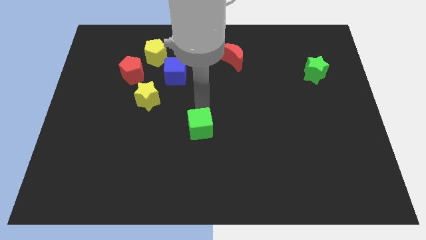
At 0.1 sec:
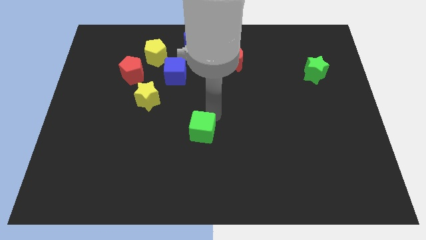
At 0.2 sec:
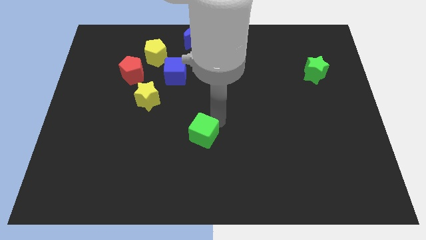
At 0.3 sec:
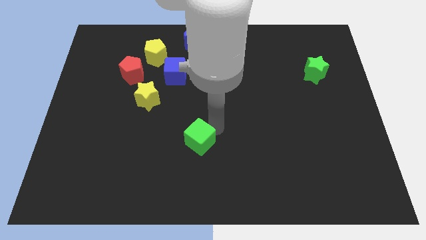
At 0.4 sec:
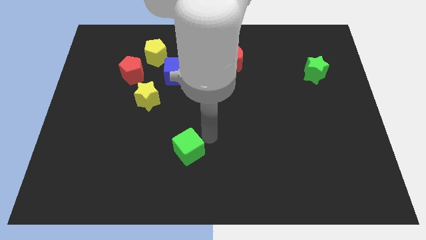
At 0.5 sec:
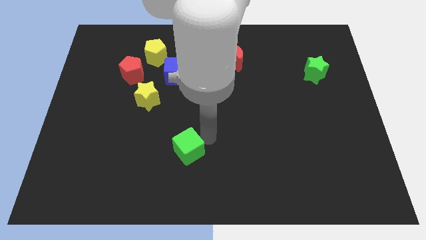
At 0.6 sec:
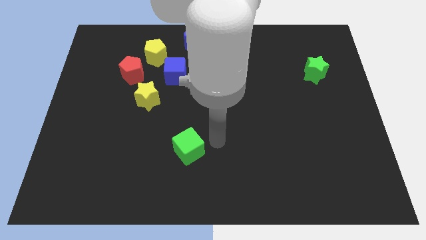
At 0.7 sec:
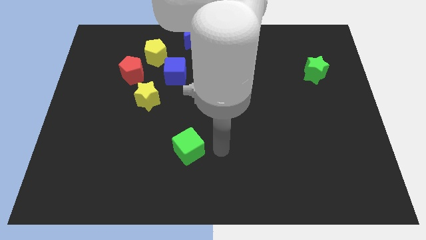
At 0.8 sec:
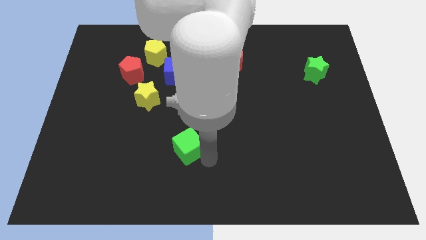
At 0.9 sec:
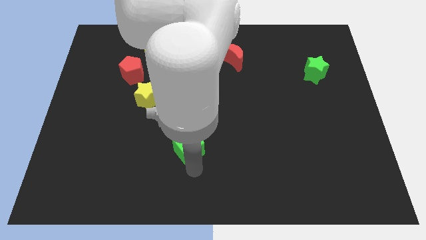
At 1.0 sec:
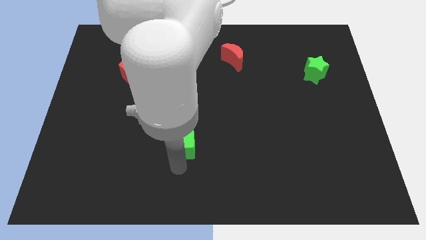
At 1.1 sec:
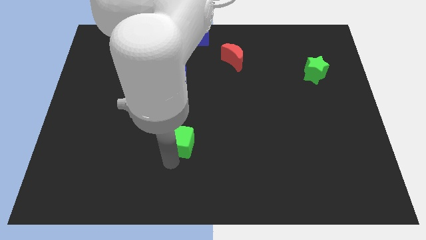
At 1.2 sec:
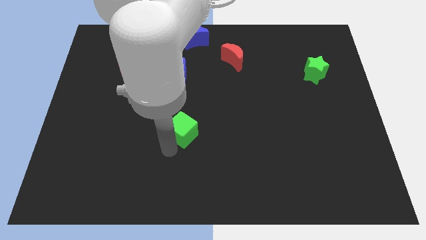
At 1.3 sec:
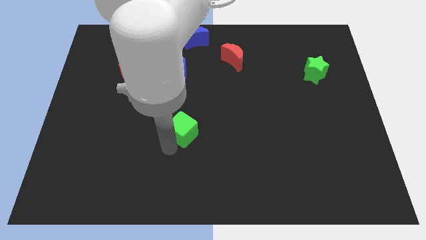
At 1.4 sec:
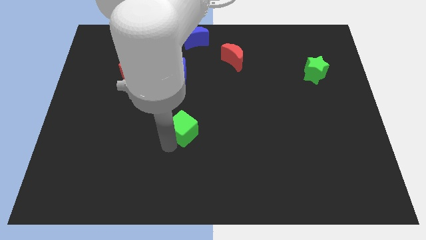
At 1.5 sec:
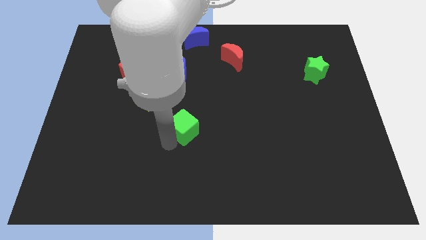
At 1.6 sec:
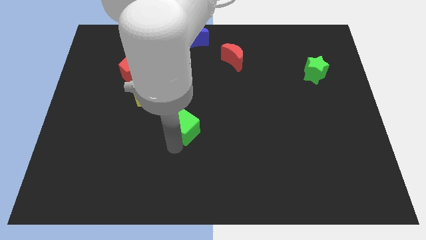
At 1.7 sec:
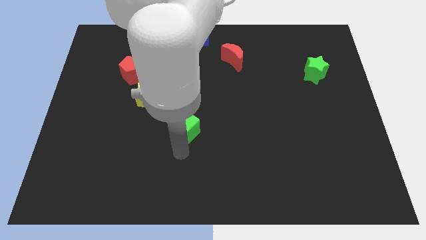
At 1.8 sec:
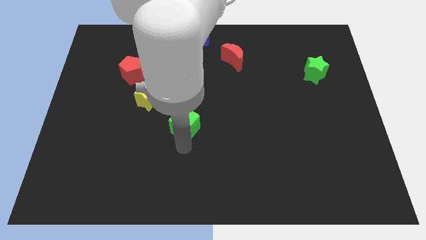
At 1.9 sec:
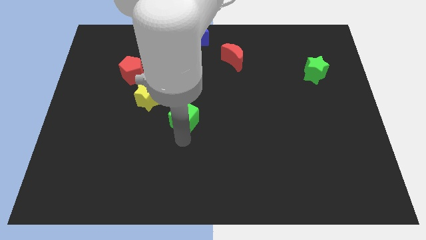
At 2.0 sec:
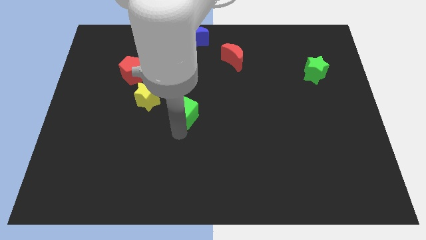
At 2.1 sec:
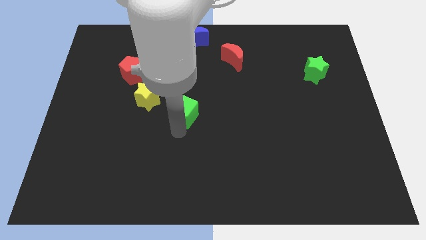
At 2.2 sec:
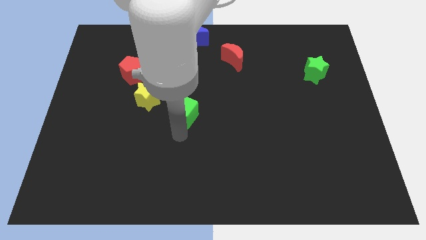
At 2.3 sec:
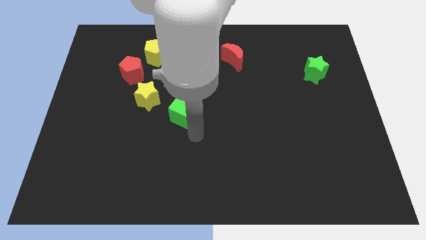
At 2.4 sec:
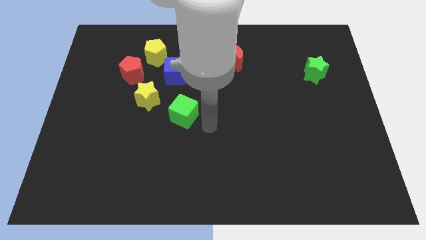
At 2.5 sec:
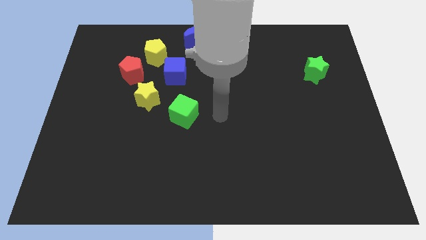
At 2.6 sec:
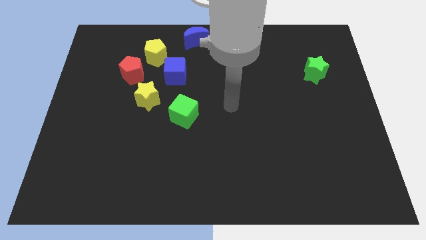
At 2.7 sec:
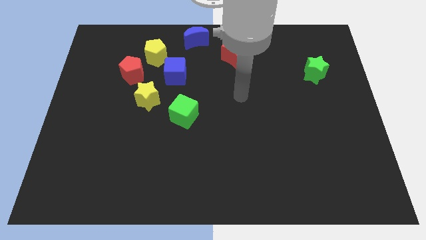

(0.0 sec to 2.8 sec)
place the green cube diagonal below the blue cube

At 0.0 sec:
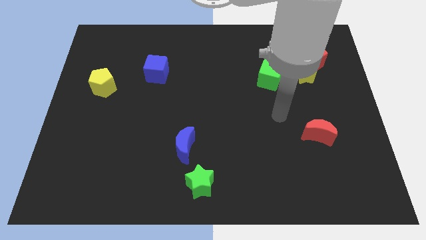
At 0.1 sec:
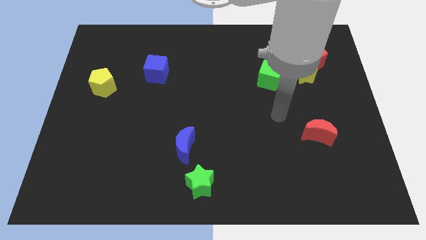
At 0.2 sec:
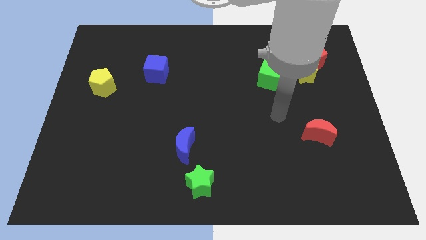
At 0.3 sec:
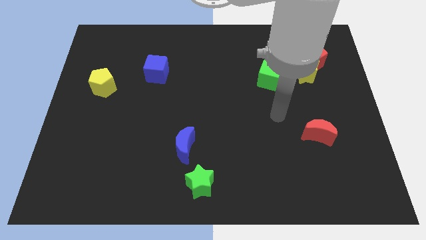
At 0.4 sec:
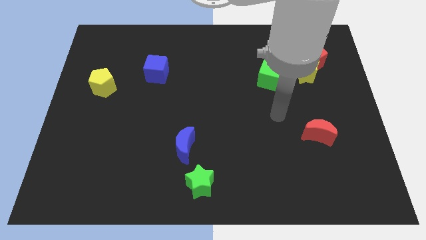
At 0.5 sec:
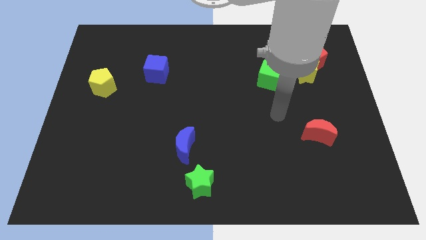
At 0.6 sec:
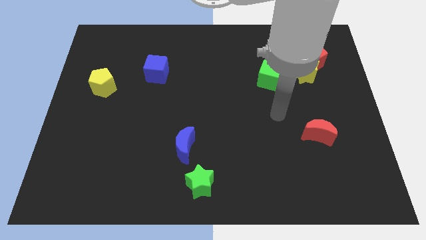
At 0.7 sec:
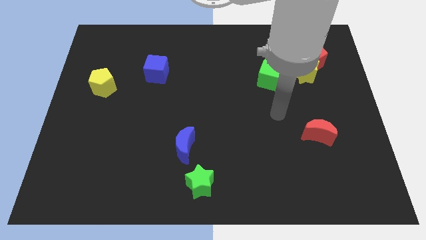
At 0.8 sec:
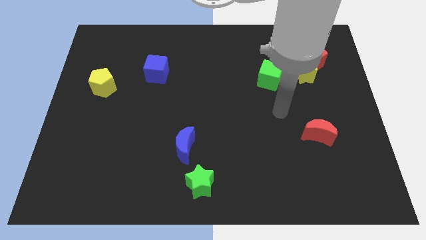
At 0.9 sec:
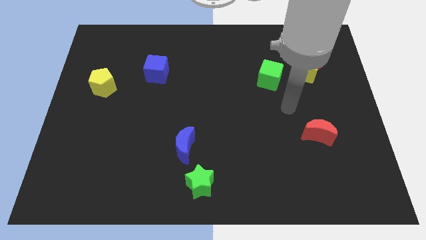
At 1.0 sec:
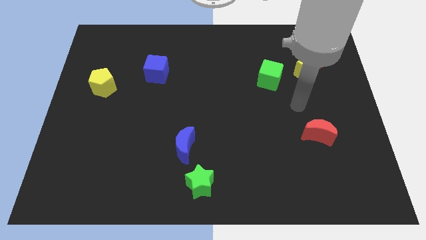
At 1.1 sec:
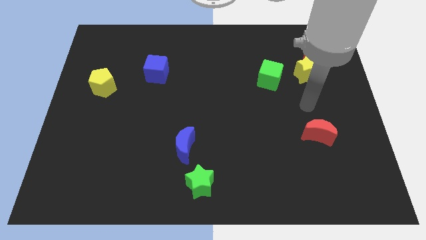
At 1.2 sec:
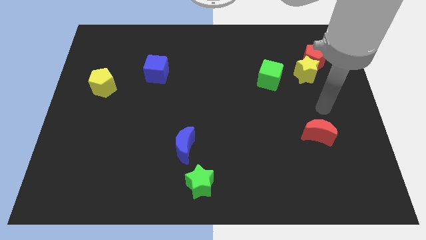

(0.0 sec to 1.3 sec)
put your arm on the top of the red moon

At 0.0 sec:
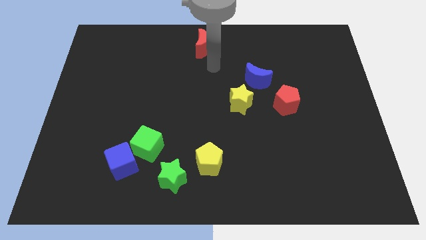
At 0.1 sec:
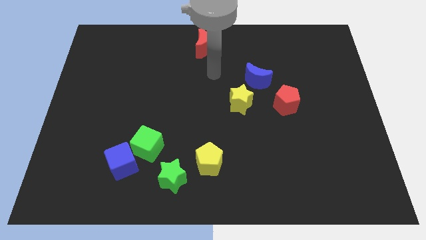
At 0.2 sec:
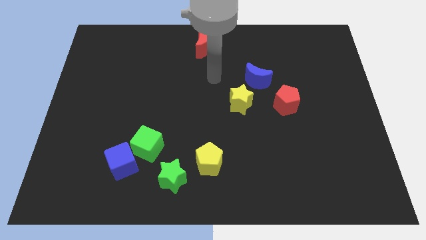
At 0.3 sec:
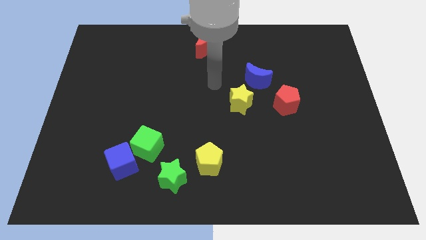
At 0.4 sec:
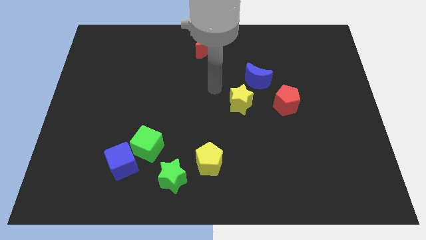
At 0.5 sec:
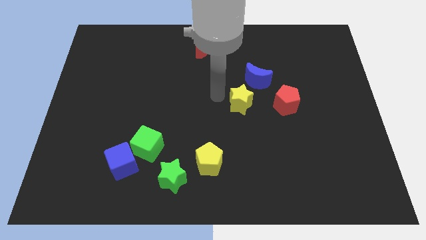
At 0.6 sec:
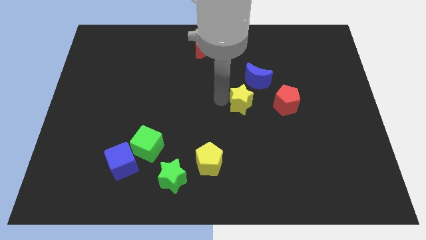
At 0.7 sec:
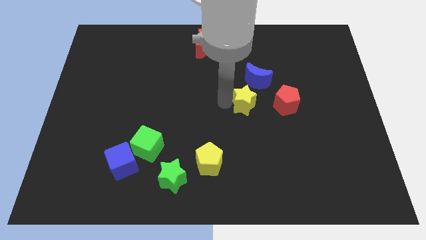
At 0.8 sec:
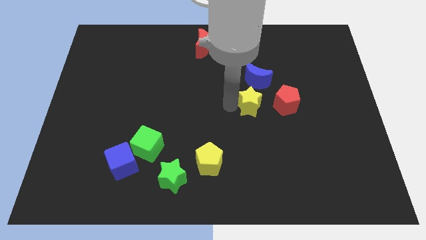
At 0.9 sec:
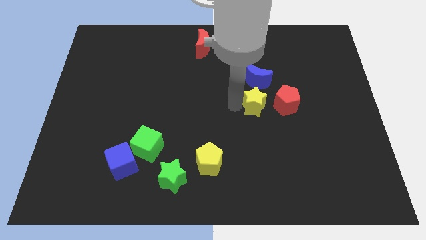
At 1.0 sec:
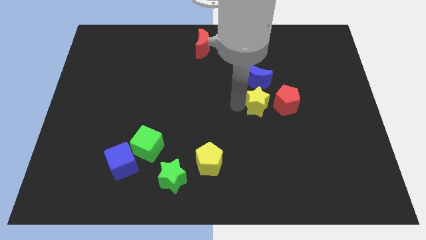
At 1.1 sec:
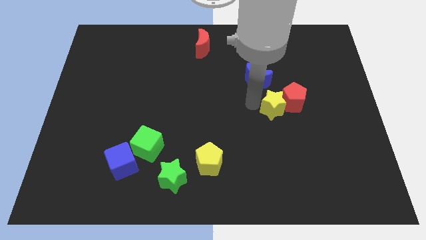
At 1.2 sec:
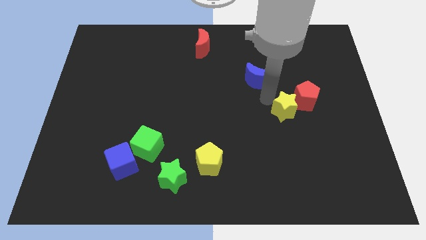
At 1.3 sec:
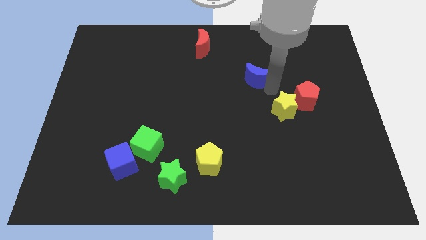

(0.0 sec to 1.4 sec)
push the red pentagon with the yellow star

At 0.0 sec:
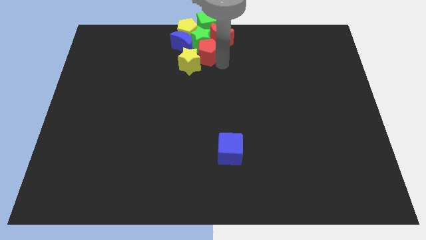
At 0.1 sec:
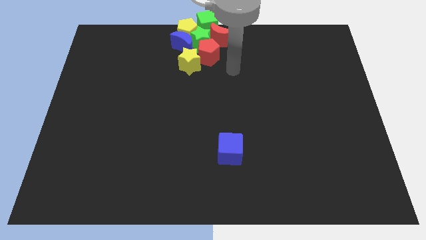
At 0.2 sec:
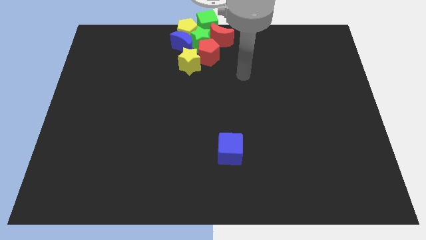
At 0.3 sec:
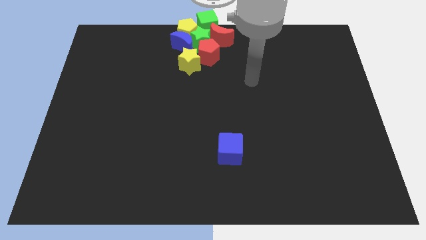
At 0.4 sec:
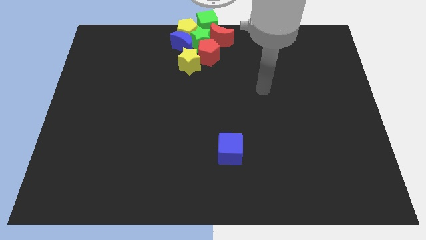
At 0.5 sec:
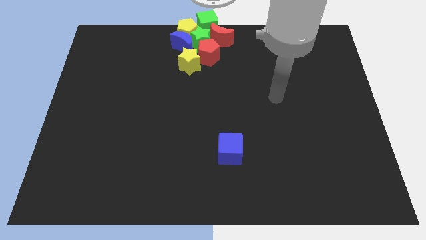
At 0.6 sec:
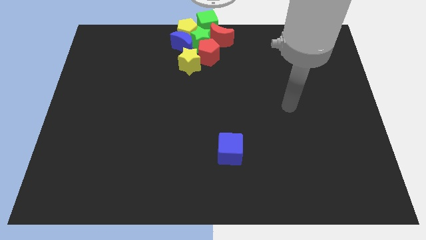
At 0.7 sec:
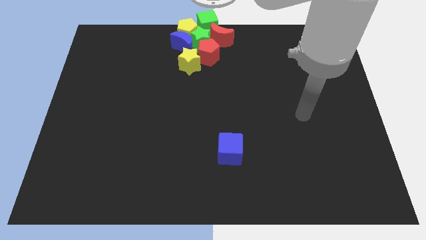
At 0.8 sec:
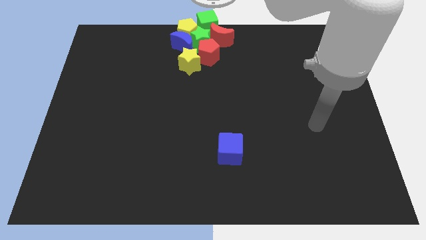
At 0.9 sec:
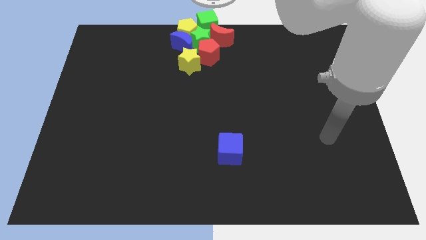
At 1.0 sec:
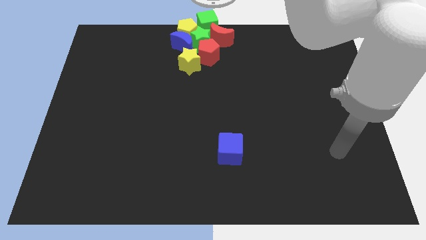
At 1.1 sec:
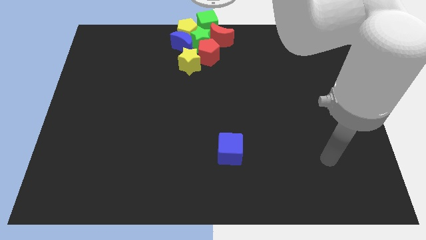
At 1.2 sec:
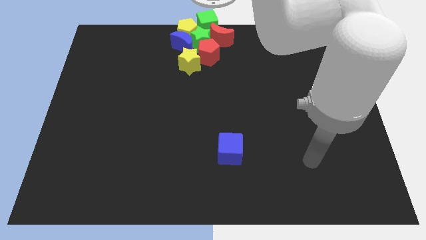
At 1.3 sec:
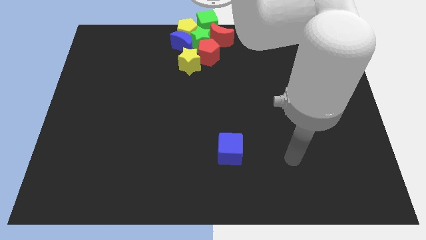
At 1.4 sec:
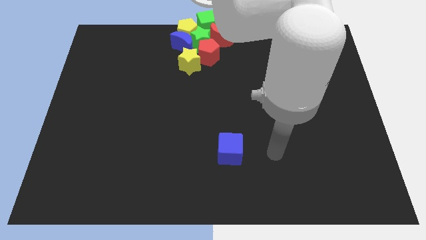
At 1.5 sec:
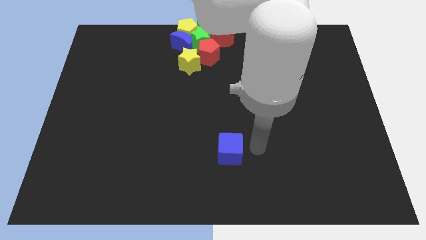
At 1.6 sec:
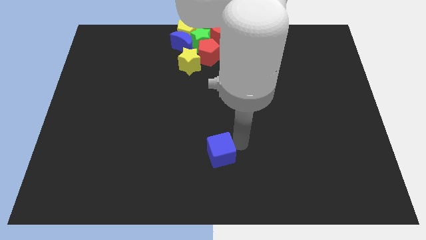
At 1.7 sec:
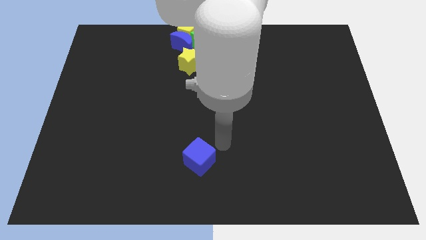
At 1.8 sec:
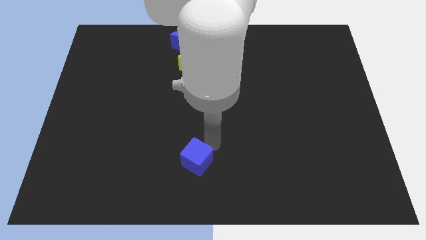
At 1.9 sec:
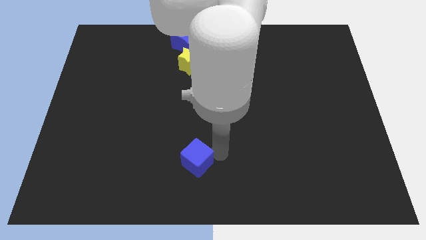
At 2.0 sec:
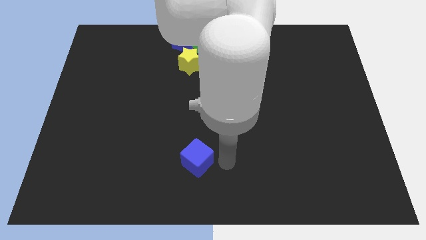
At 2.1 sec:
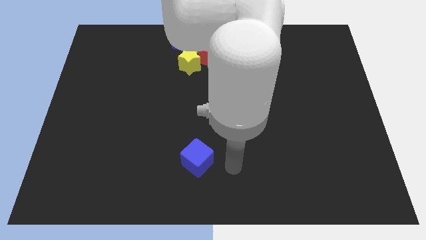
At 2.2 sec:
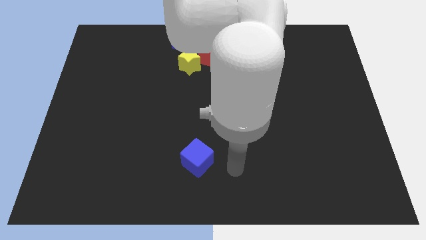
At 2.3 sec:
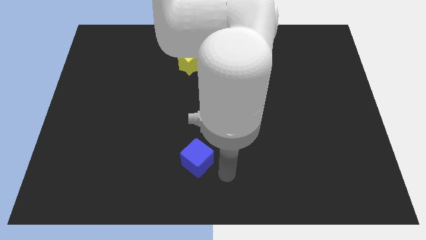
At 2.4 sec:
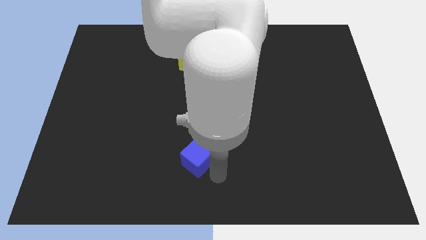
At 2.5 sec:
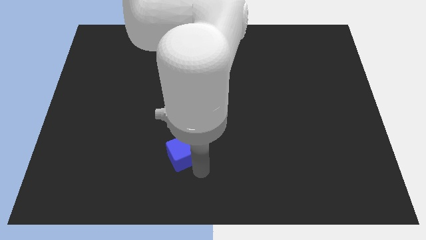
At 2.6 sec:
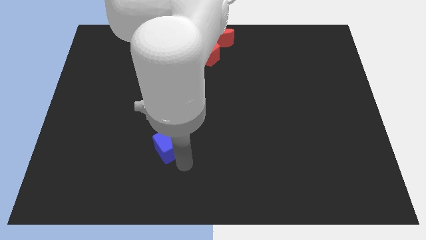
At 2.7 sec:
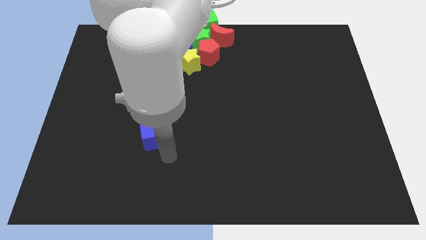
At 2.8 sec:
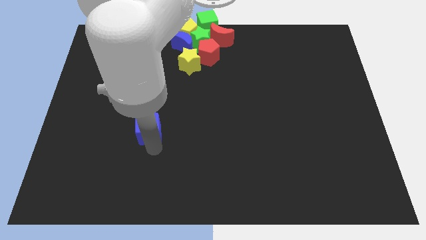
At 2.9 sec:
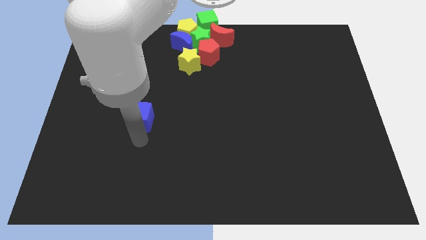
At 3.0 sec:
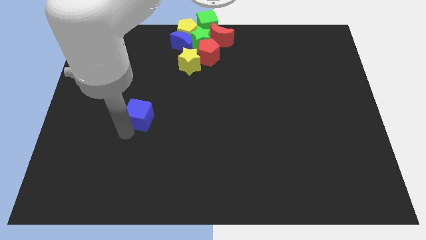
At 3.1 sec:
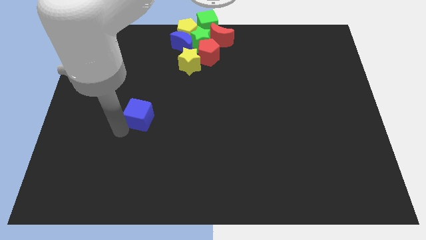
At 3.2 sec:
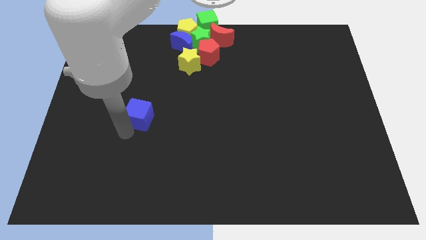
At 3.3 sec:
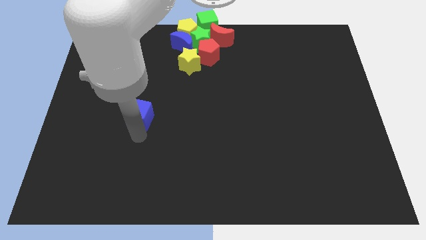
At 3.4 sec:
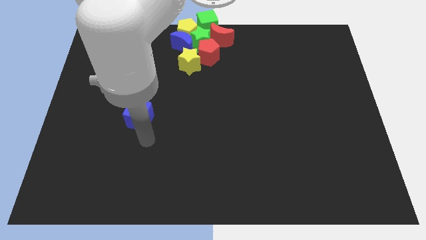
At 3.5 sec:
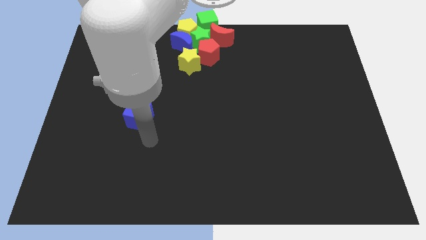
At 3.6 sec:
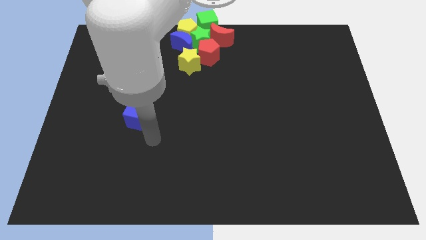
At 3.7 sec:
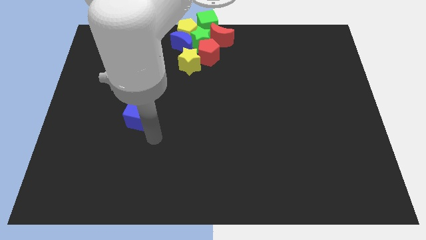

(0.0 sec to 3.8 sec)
push the blue cube to the left center of the board
